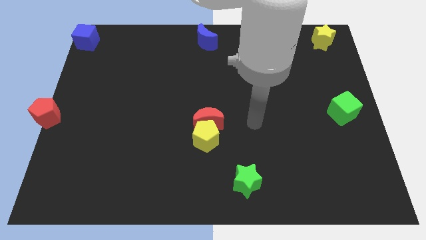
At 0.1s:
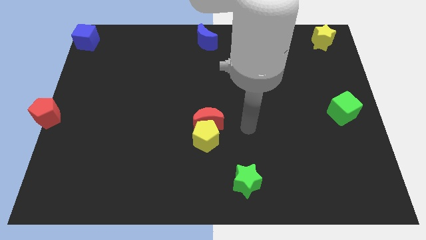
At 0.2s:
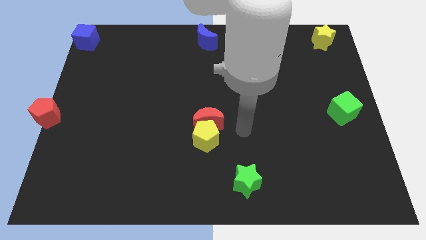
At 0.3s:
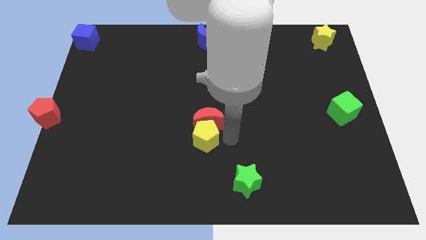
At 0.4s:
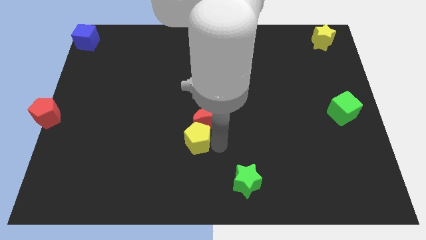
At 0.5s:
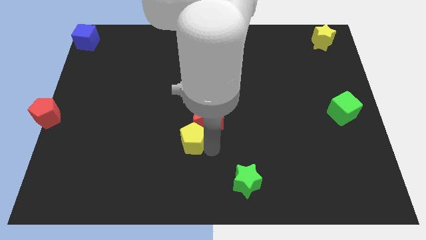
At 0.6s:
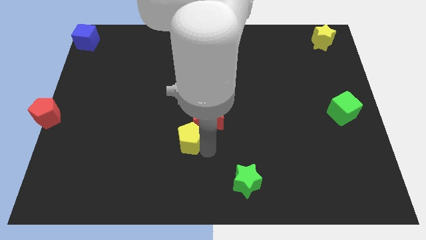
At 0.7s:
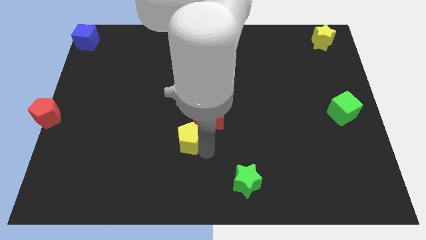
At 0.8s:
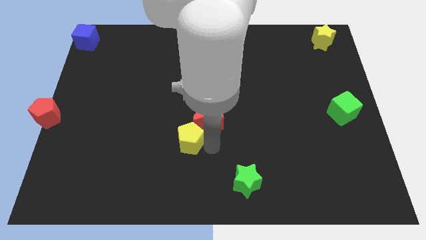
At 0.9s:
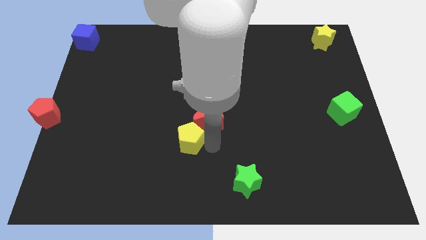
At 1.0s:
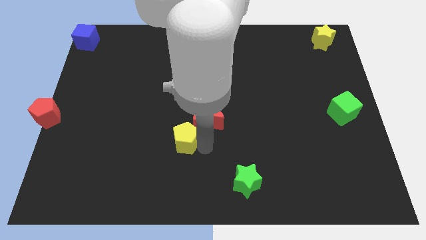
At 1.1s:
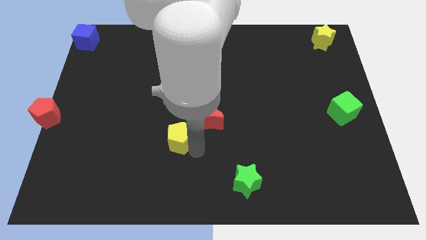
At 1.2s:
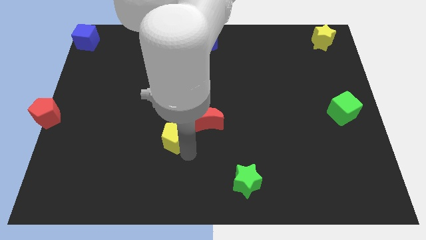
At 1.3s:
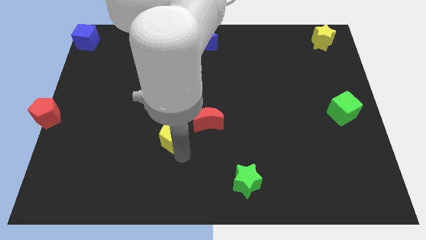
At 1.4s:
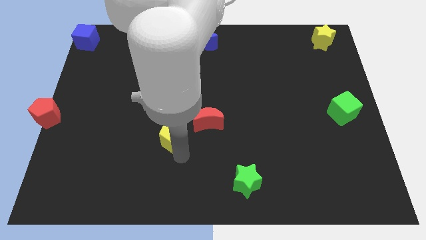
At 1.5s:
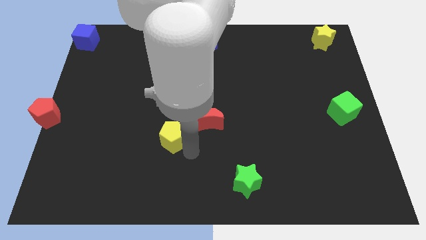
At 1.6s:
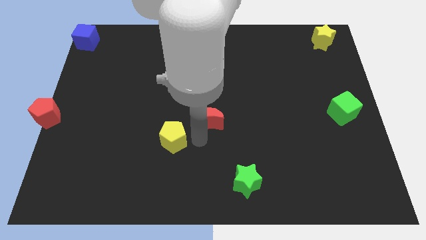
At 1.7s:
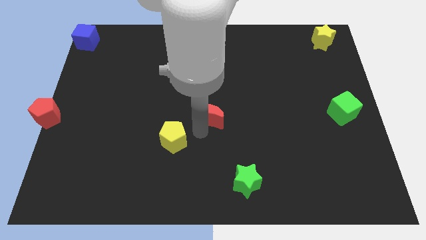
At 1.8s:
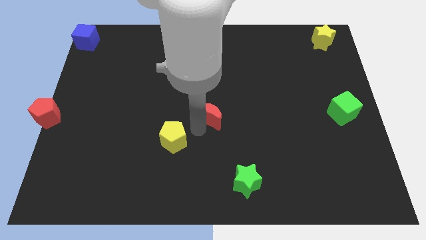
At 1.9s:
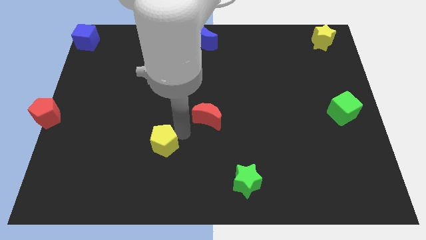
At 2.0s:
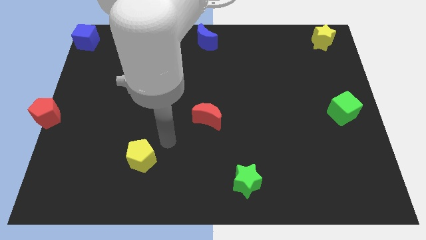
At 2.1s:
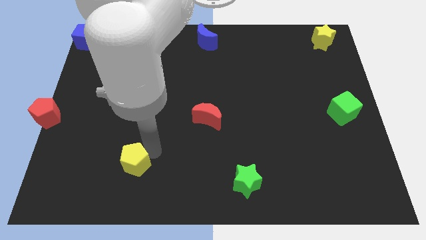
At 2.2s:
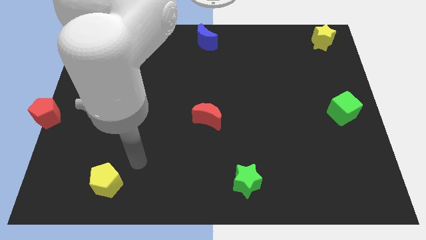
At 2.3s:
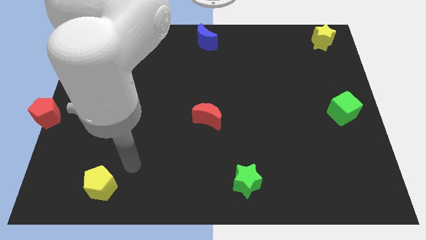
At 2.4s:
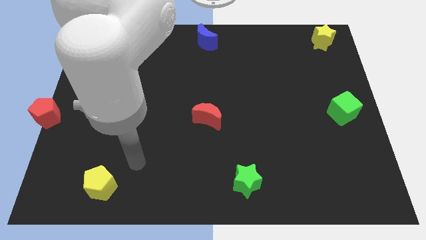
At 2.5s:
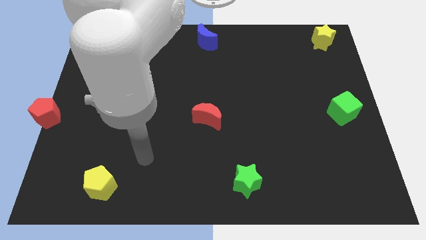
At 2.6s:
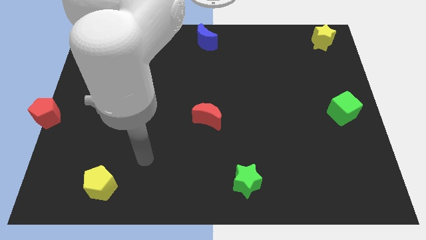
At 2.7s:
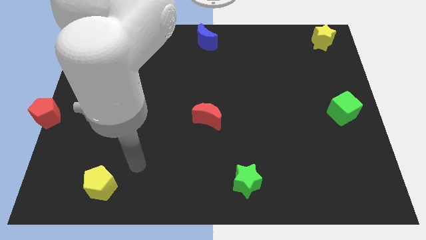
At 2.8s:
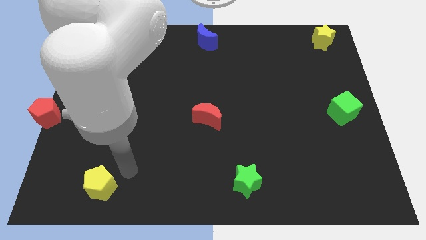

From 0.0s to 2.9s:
separate the yellow pentagon from the red crescent

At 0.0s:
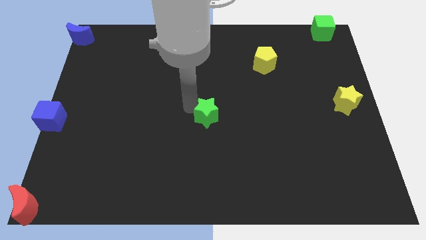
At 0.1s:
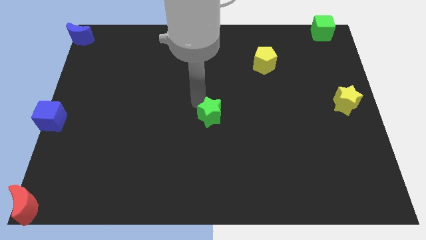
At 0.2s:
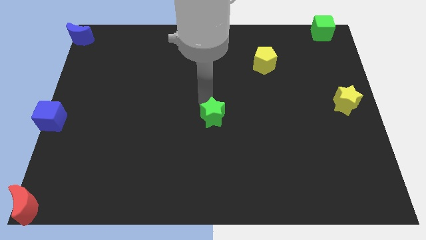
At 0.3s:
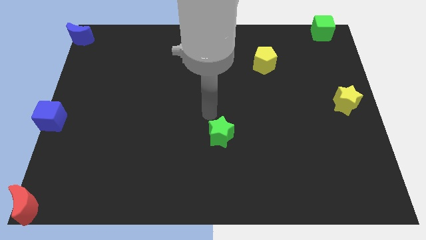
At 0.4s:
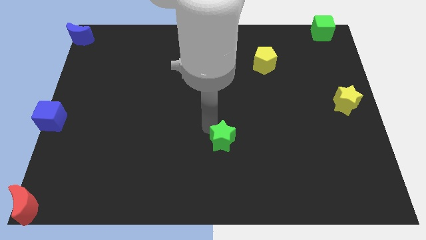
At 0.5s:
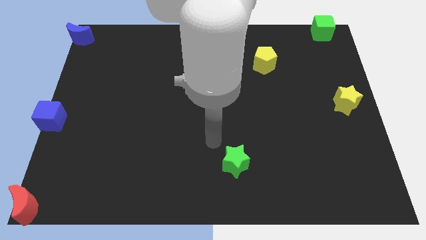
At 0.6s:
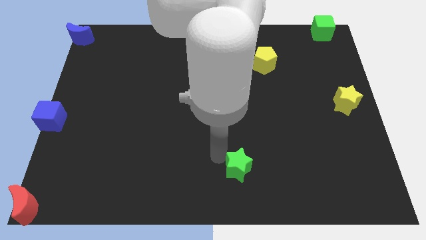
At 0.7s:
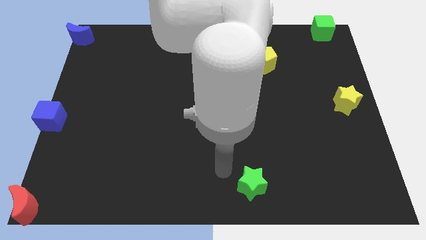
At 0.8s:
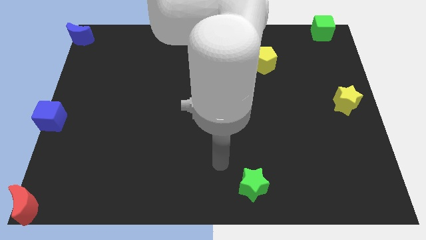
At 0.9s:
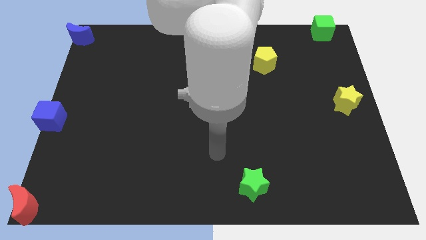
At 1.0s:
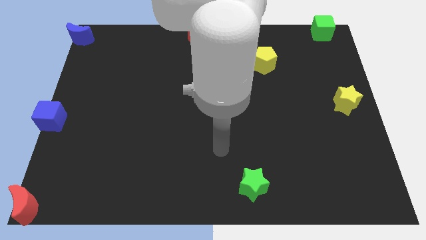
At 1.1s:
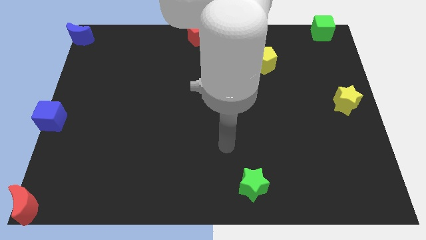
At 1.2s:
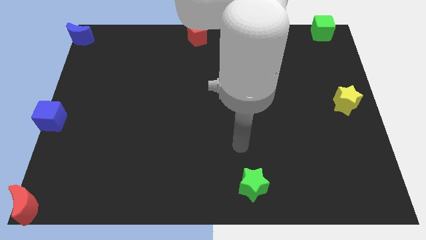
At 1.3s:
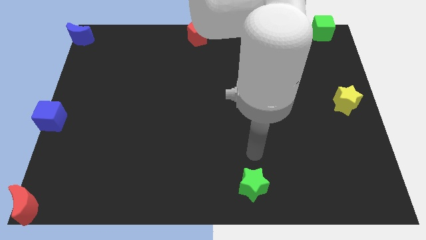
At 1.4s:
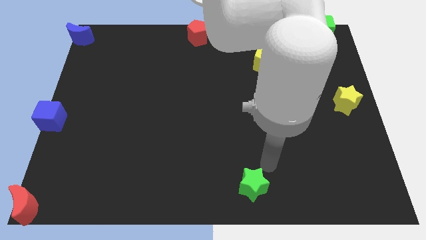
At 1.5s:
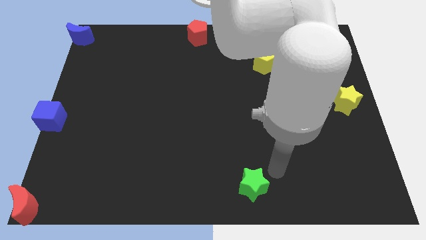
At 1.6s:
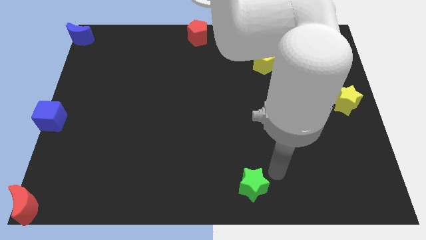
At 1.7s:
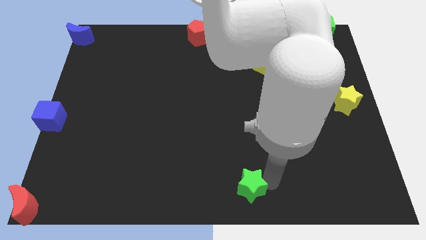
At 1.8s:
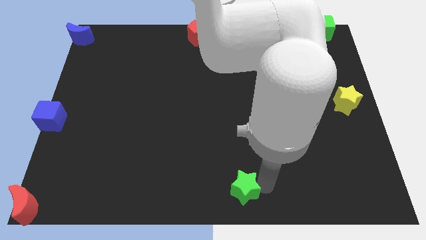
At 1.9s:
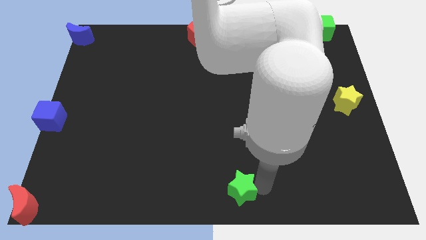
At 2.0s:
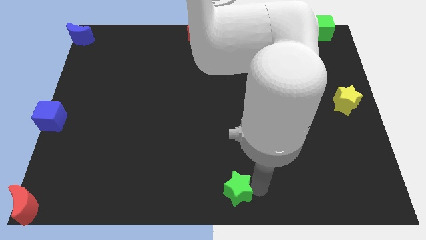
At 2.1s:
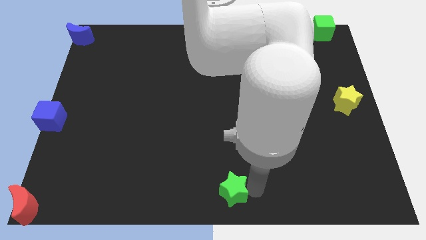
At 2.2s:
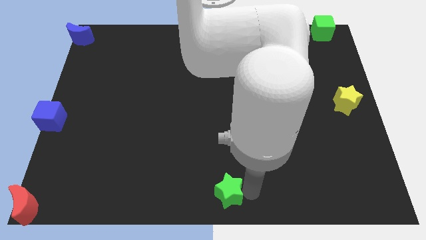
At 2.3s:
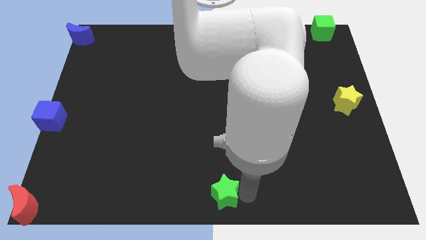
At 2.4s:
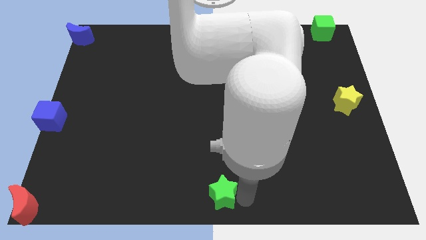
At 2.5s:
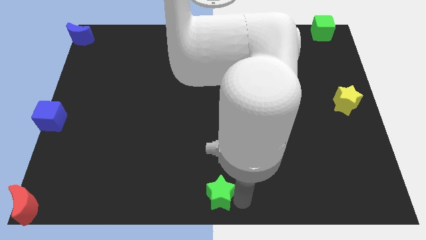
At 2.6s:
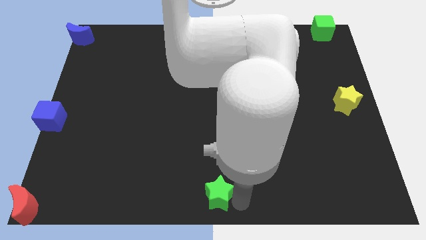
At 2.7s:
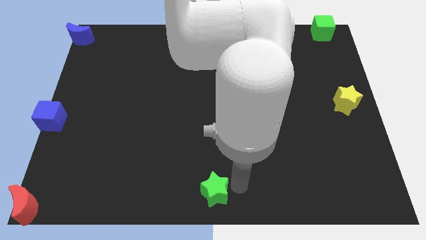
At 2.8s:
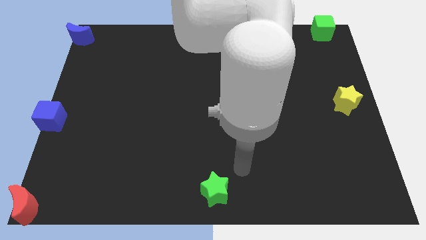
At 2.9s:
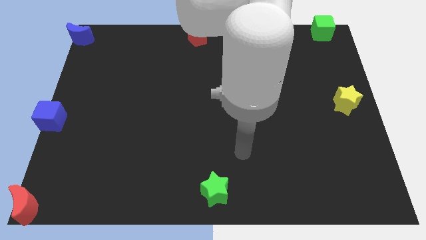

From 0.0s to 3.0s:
place the green star to the bottom center of the board

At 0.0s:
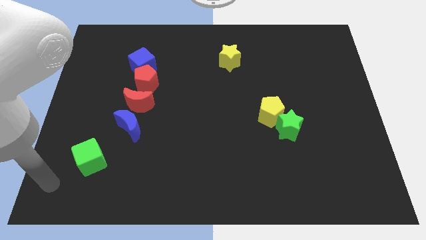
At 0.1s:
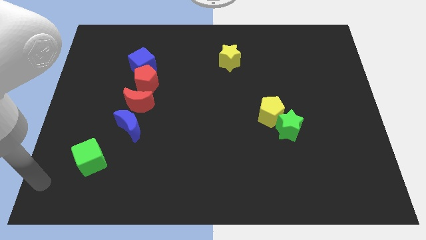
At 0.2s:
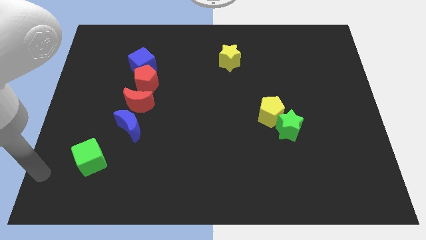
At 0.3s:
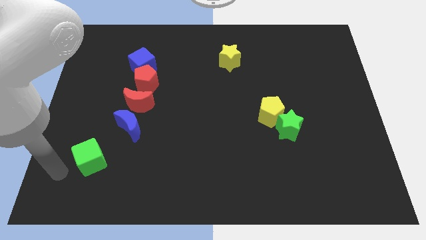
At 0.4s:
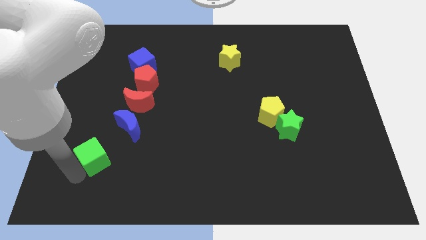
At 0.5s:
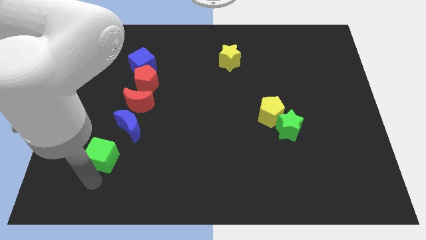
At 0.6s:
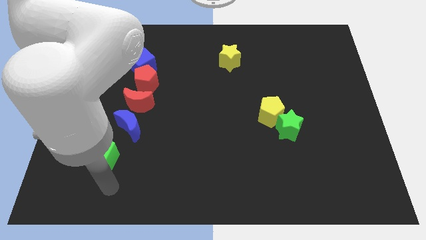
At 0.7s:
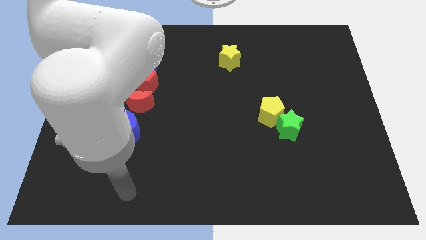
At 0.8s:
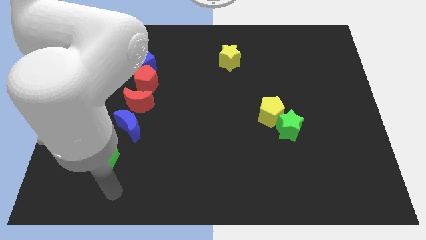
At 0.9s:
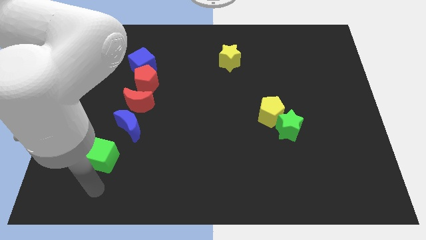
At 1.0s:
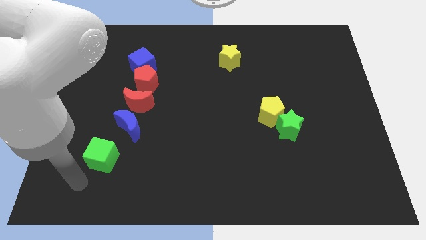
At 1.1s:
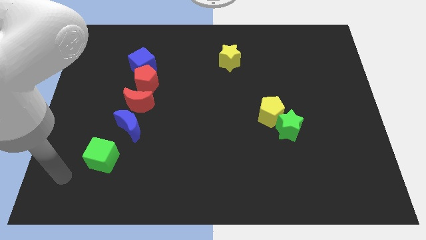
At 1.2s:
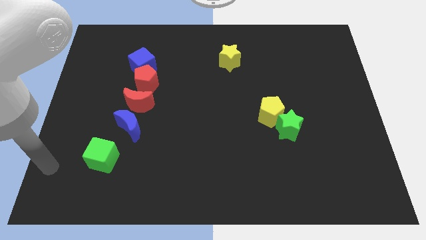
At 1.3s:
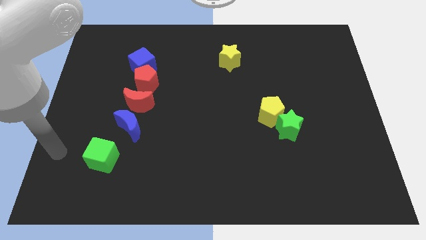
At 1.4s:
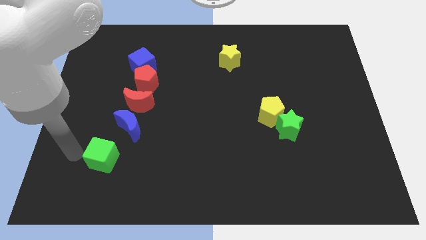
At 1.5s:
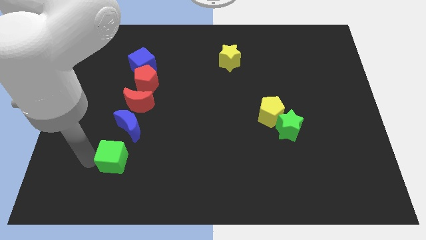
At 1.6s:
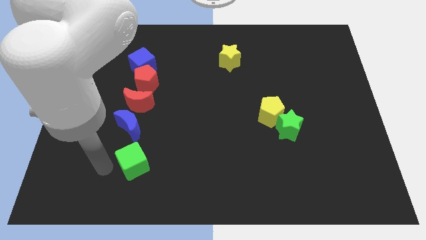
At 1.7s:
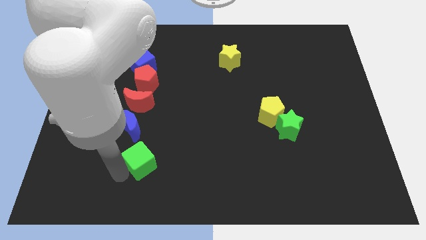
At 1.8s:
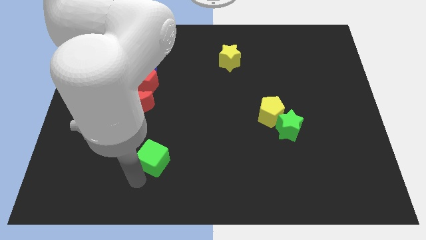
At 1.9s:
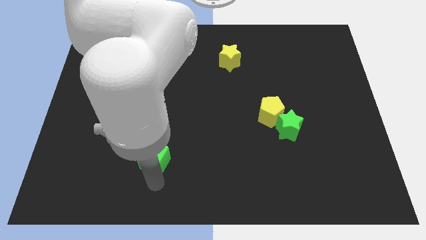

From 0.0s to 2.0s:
push the green cube towards the left of the board

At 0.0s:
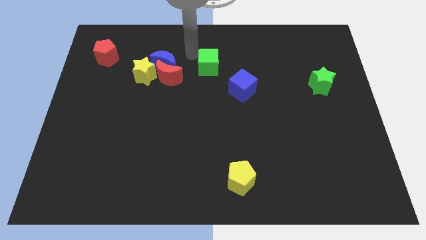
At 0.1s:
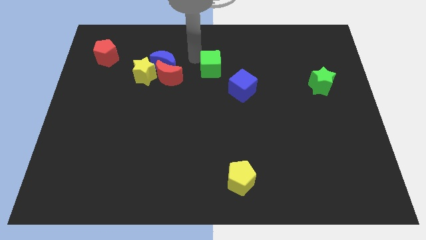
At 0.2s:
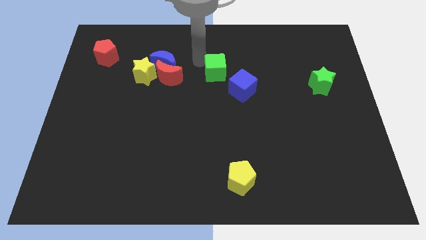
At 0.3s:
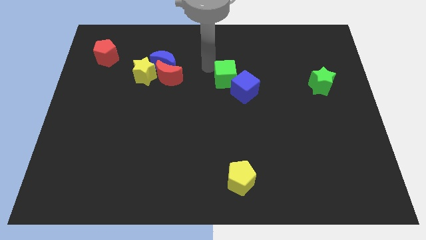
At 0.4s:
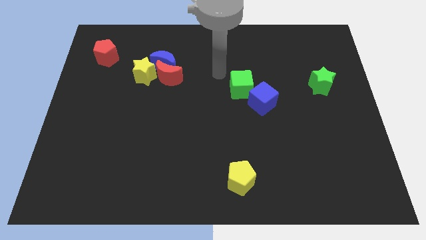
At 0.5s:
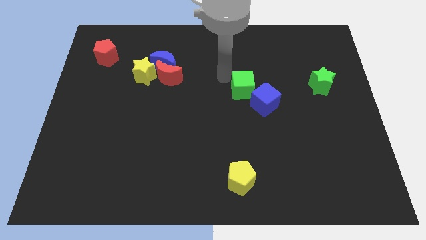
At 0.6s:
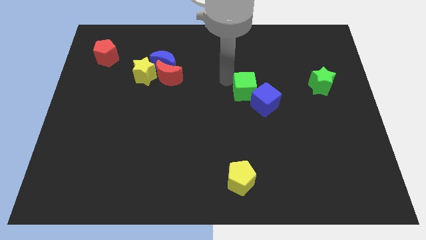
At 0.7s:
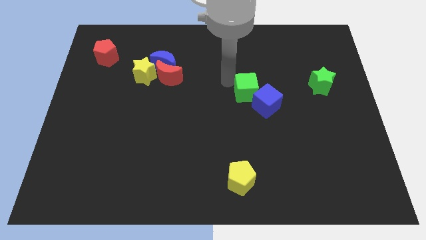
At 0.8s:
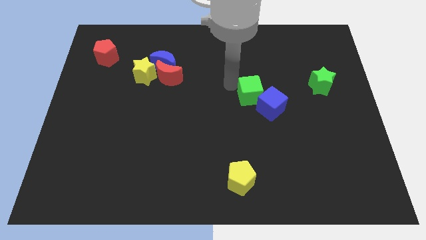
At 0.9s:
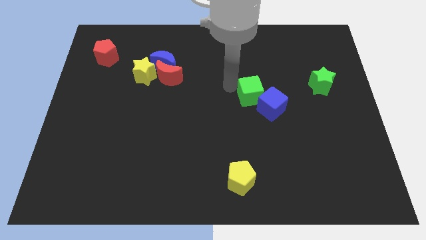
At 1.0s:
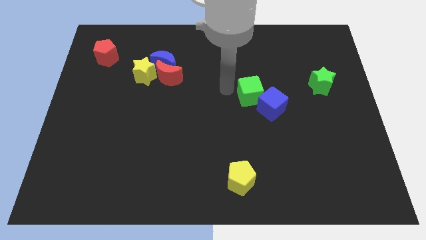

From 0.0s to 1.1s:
move the green cube into blue cube
